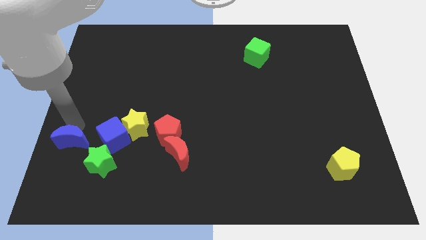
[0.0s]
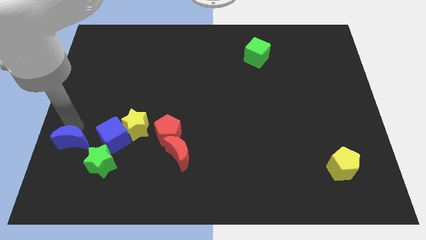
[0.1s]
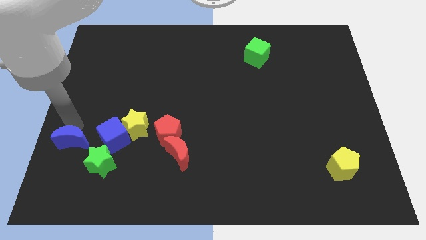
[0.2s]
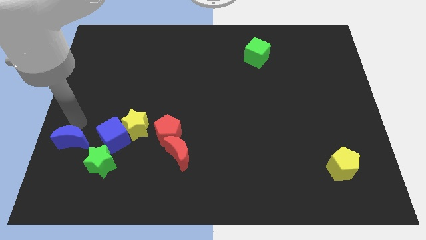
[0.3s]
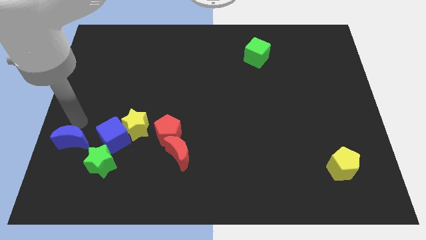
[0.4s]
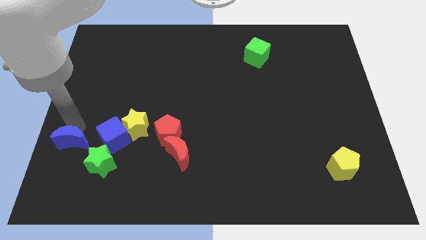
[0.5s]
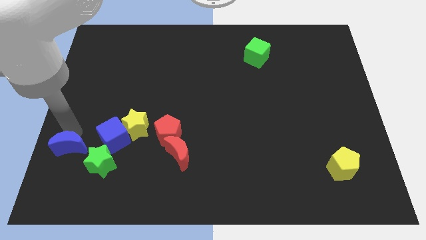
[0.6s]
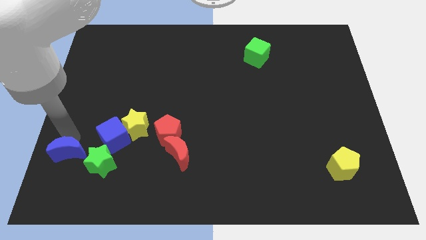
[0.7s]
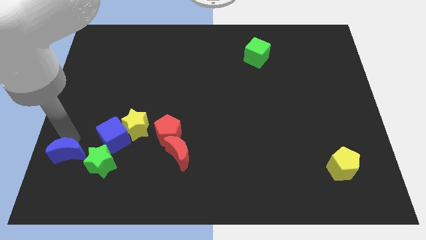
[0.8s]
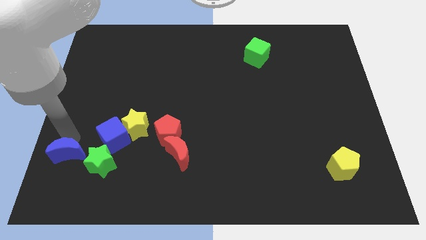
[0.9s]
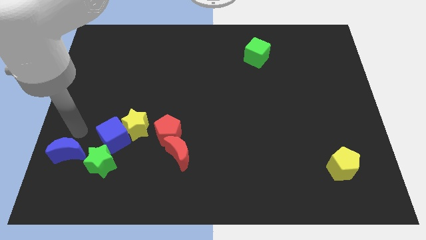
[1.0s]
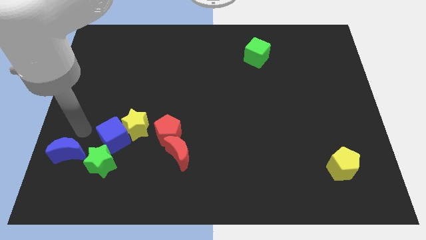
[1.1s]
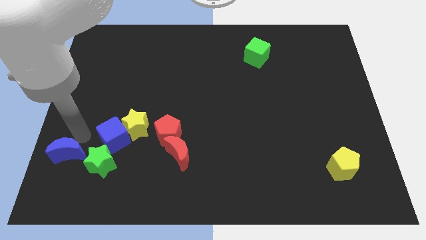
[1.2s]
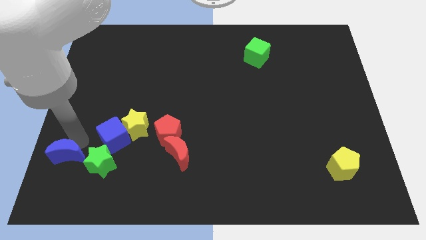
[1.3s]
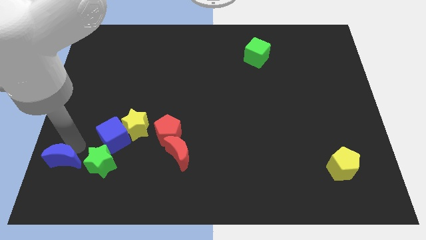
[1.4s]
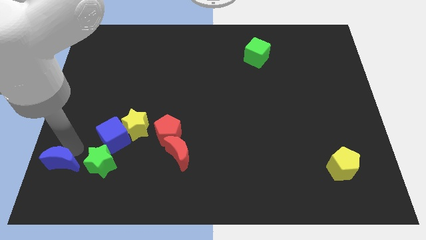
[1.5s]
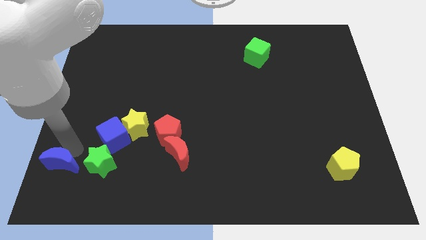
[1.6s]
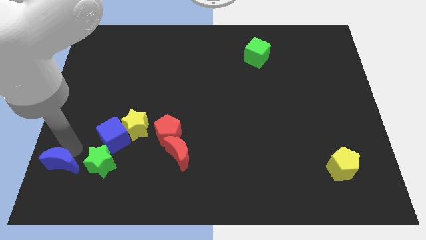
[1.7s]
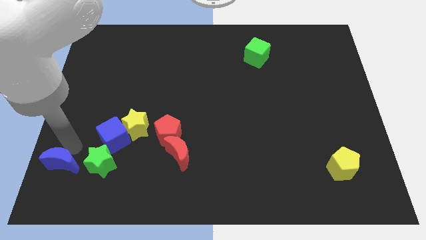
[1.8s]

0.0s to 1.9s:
move the blue moon at the left side of the green star

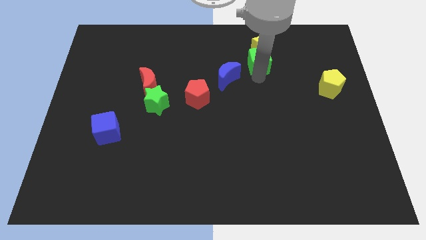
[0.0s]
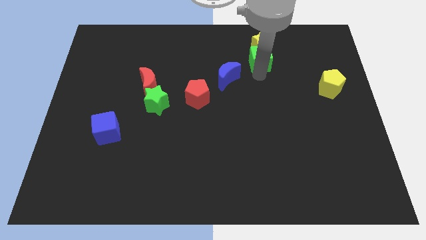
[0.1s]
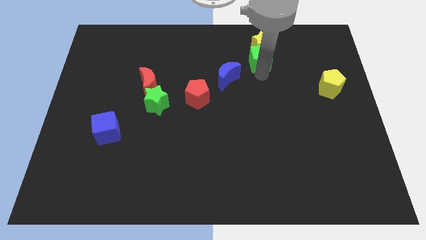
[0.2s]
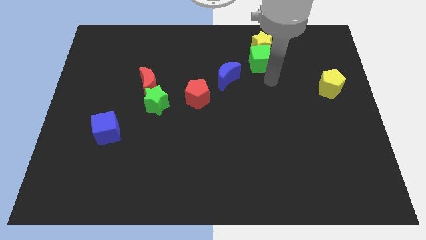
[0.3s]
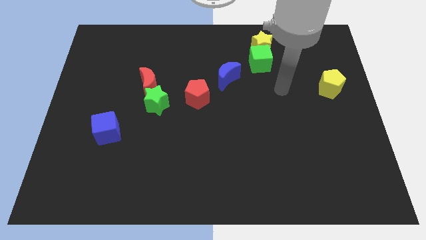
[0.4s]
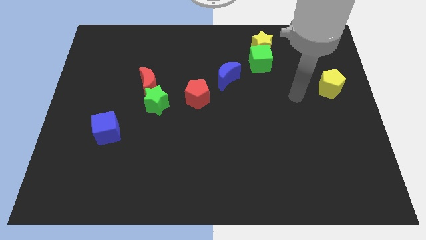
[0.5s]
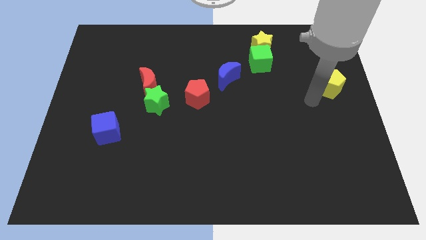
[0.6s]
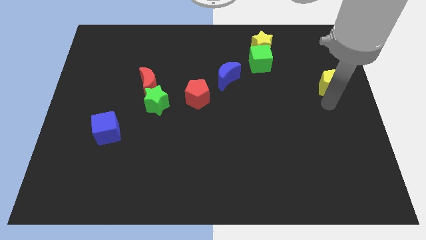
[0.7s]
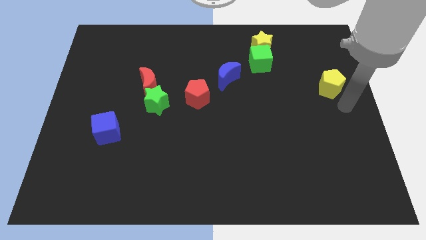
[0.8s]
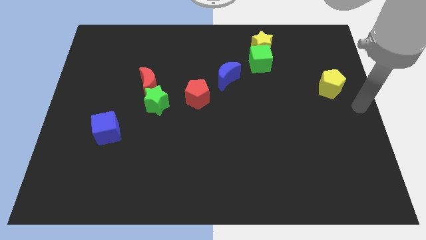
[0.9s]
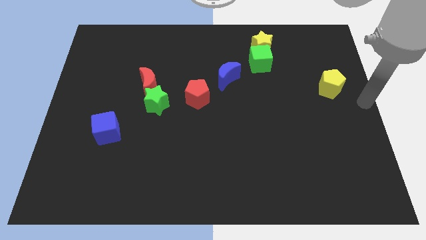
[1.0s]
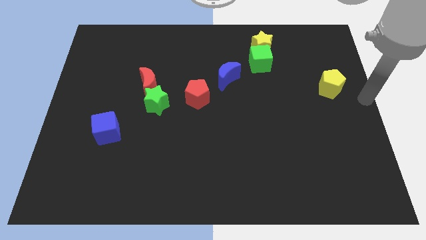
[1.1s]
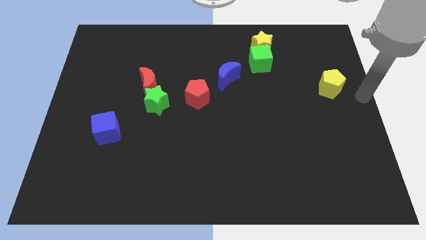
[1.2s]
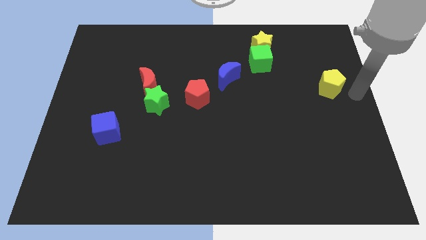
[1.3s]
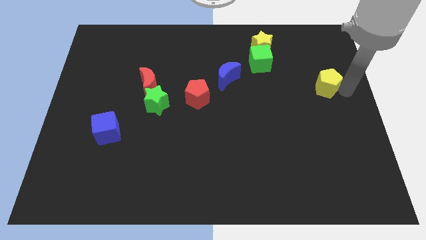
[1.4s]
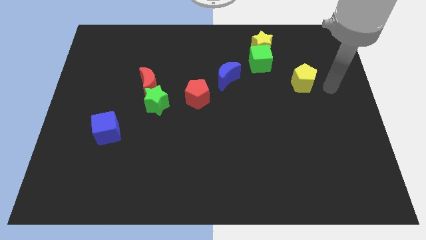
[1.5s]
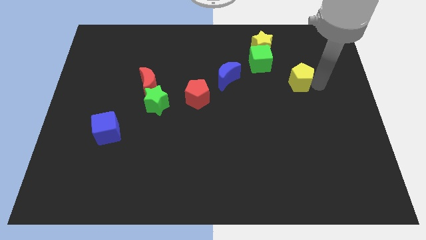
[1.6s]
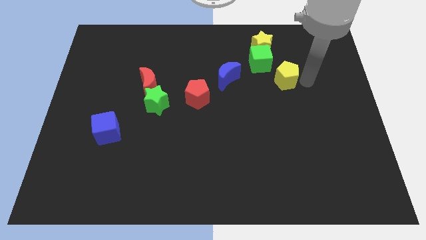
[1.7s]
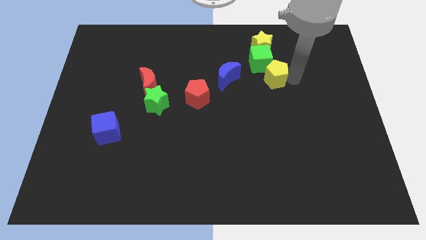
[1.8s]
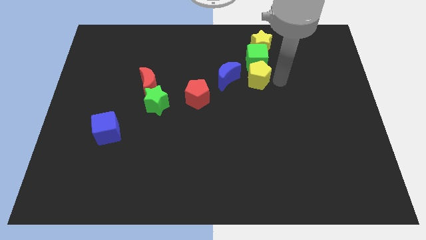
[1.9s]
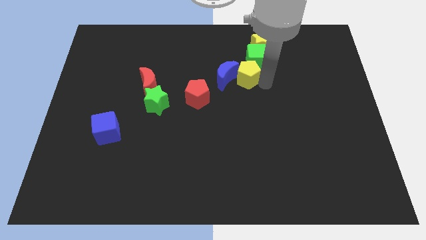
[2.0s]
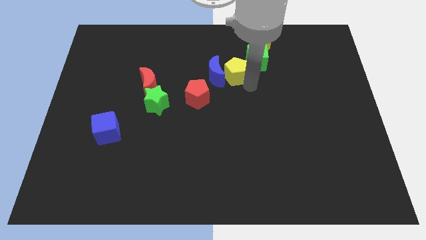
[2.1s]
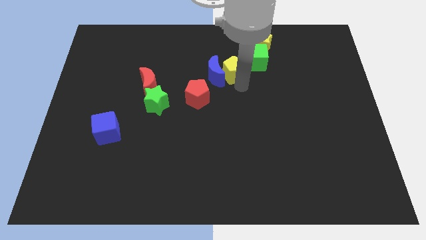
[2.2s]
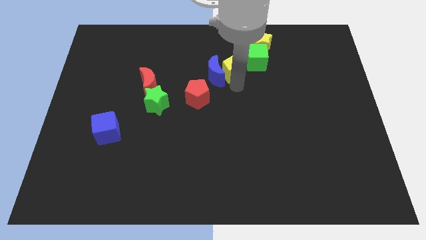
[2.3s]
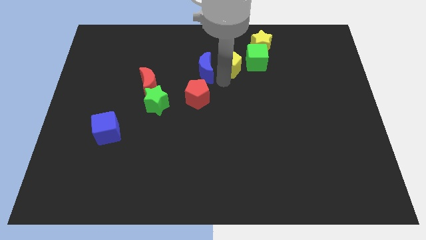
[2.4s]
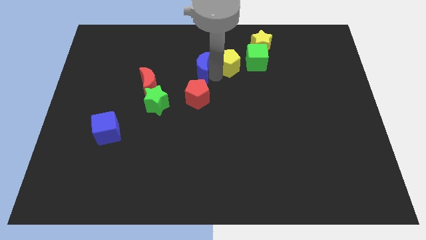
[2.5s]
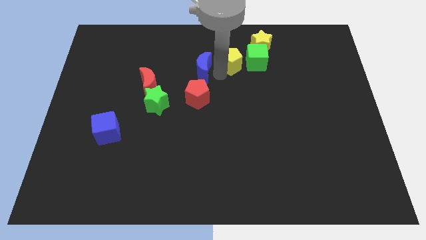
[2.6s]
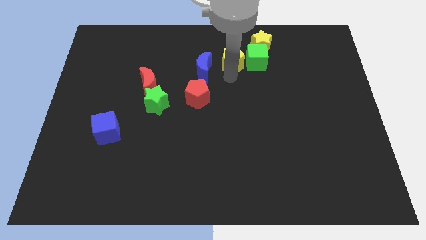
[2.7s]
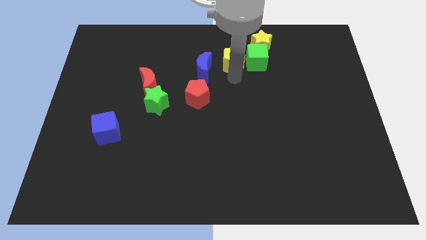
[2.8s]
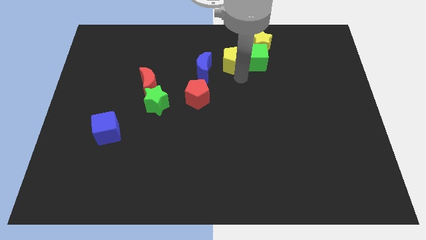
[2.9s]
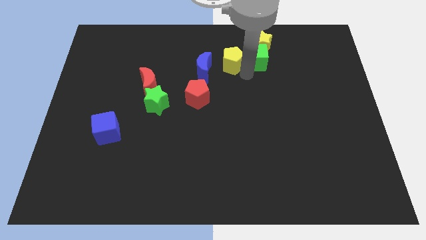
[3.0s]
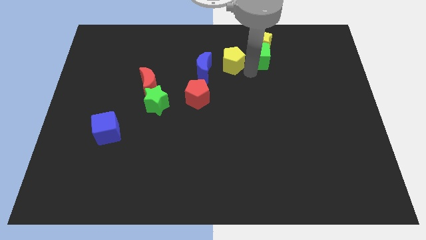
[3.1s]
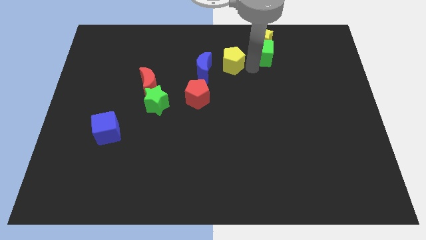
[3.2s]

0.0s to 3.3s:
place the yellow pentagon to the left of the green cube

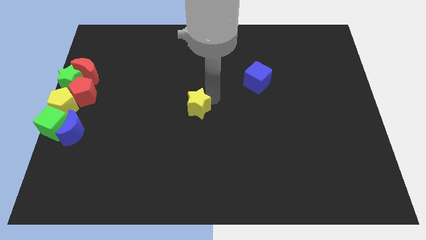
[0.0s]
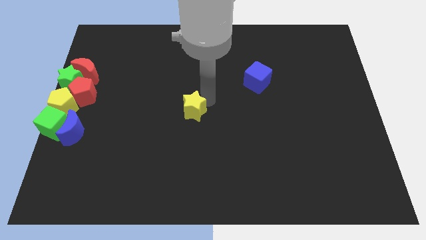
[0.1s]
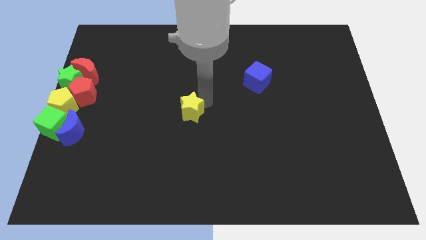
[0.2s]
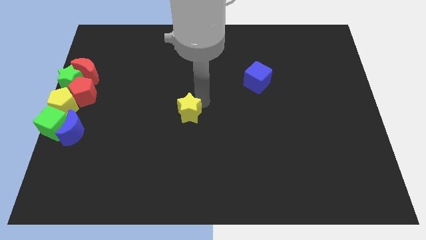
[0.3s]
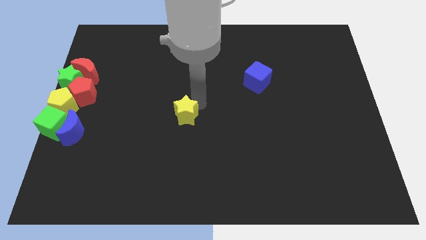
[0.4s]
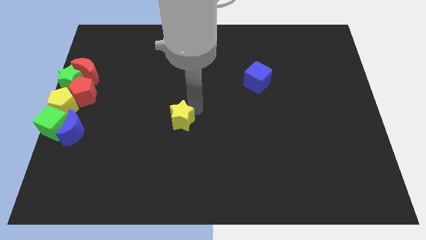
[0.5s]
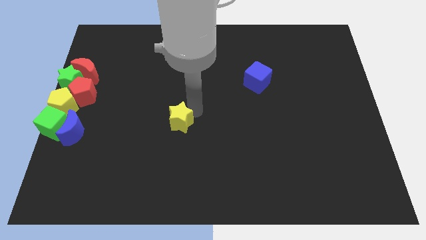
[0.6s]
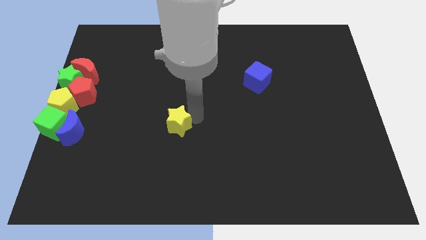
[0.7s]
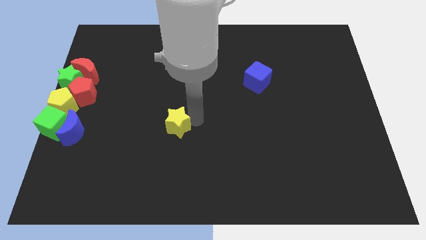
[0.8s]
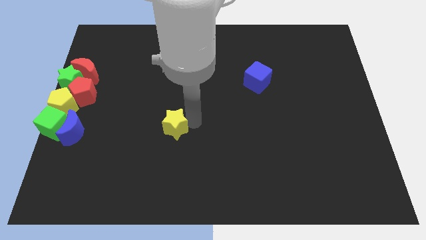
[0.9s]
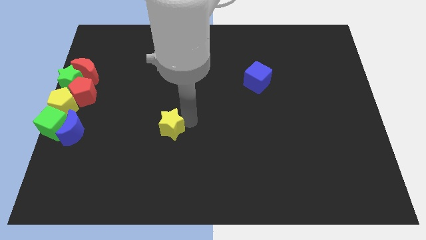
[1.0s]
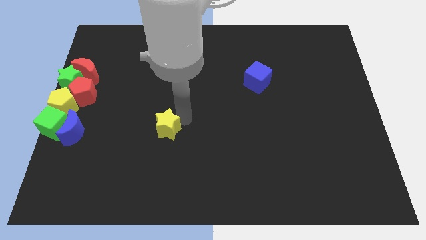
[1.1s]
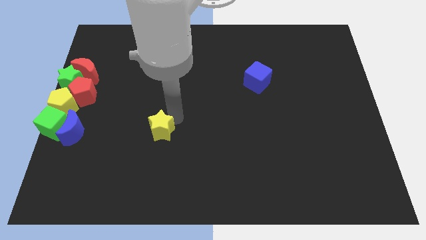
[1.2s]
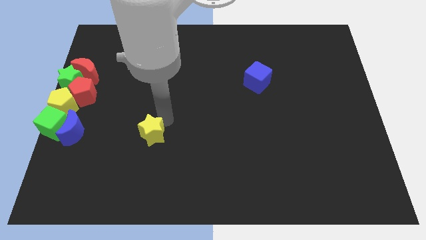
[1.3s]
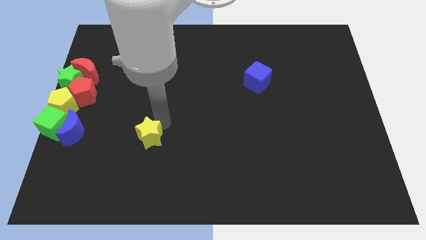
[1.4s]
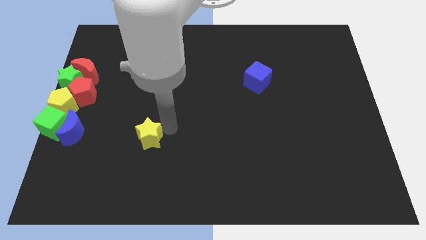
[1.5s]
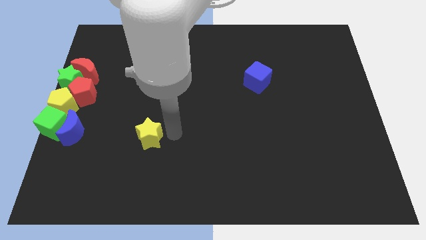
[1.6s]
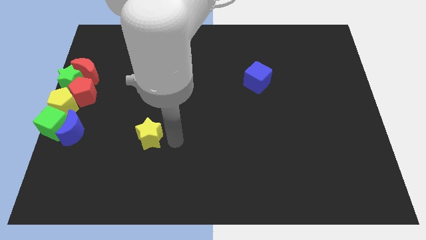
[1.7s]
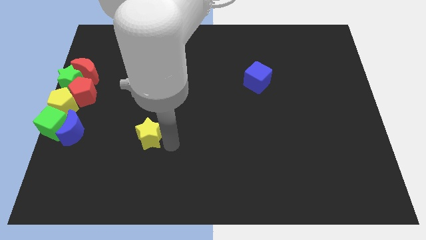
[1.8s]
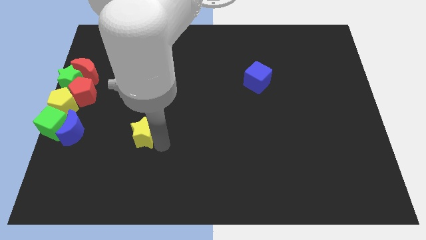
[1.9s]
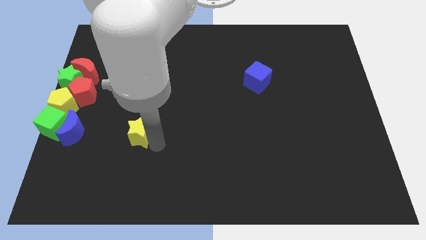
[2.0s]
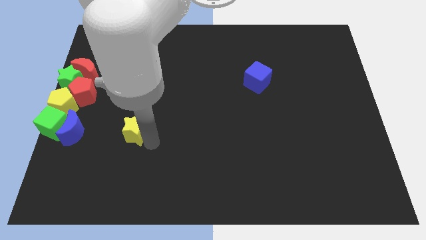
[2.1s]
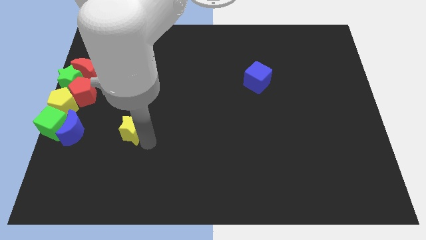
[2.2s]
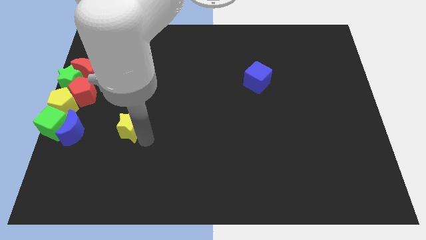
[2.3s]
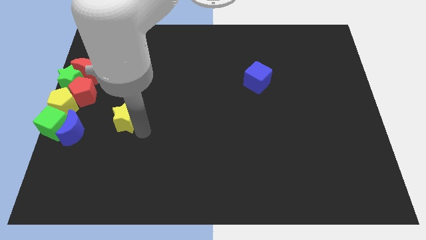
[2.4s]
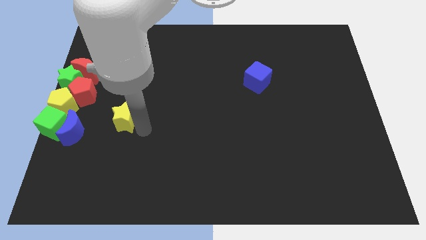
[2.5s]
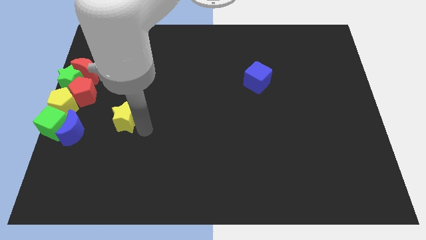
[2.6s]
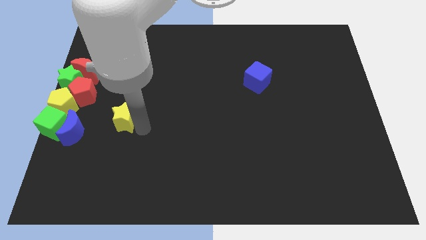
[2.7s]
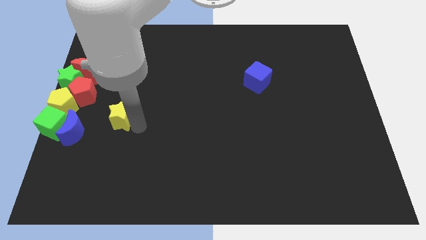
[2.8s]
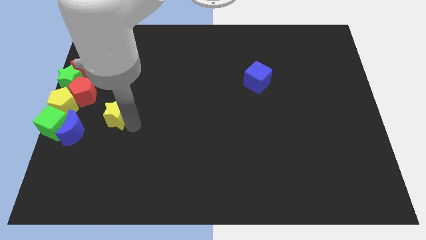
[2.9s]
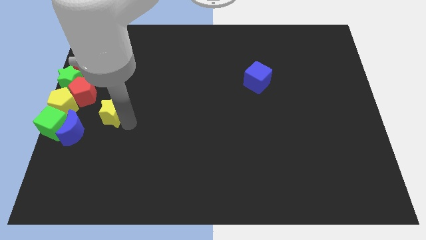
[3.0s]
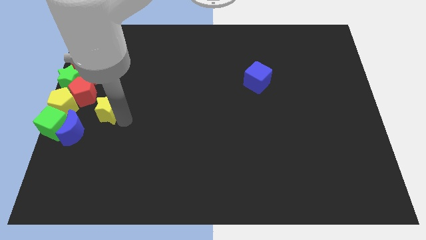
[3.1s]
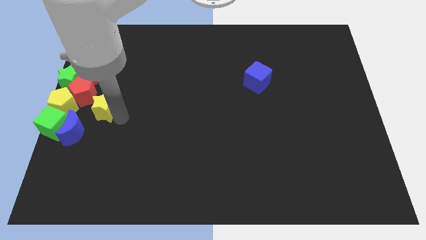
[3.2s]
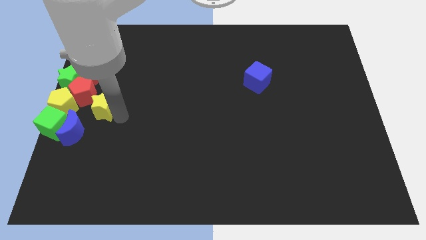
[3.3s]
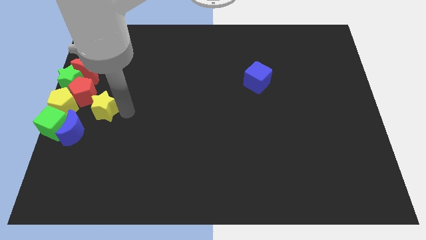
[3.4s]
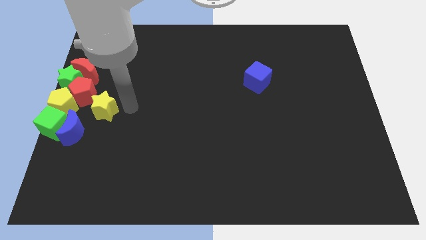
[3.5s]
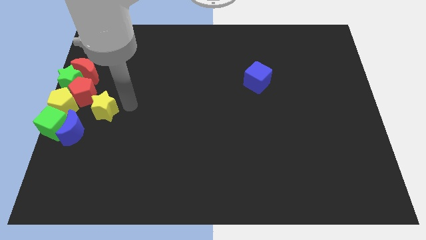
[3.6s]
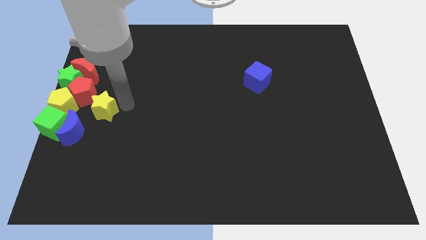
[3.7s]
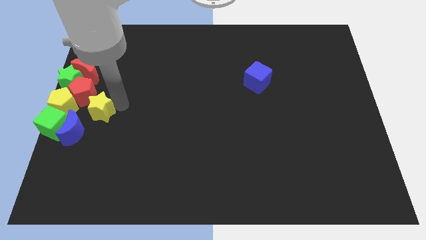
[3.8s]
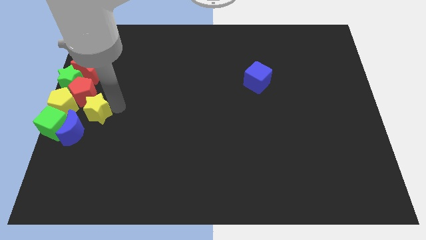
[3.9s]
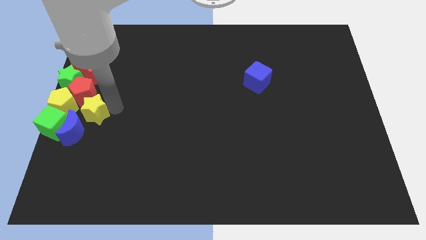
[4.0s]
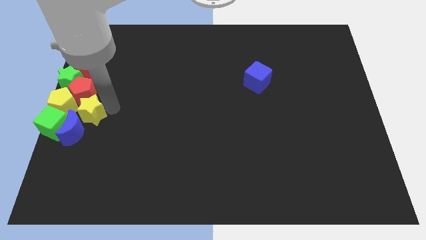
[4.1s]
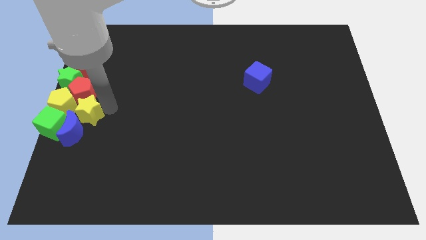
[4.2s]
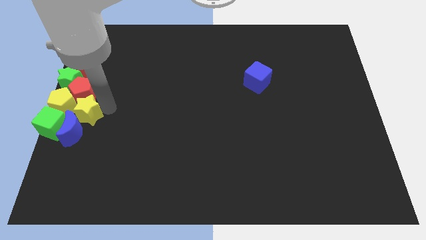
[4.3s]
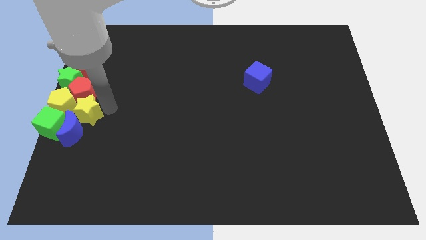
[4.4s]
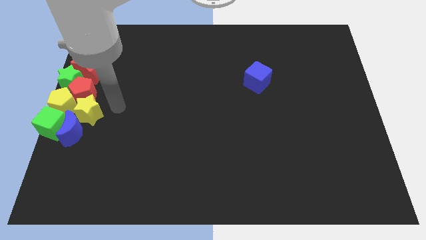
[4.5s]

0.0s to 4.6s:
move the yellow star into the group of blocks
